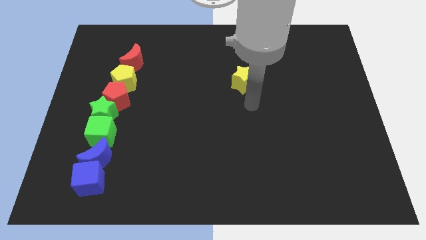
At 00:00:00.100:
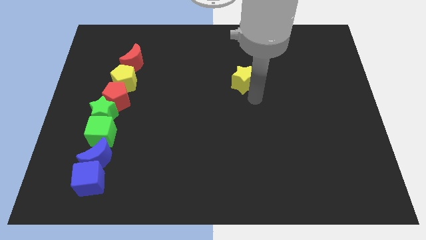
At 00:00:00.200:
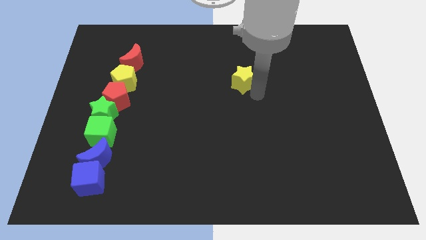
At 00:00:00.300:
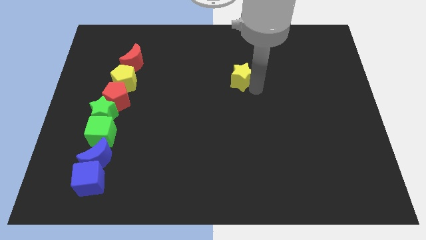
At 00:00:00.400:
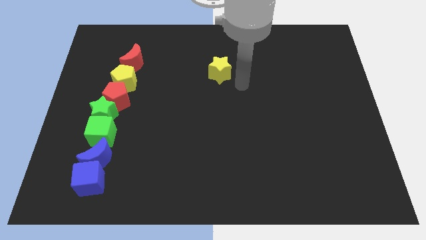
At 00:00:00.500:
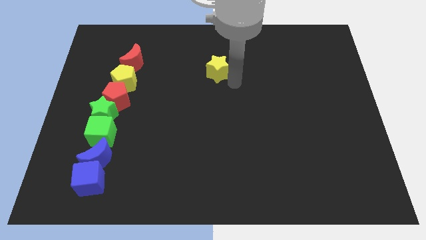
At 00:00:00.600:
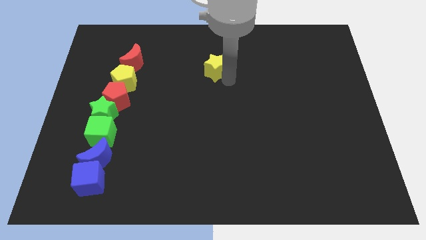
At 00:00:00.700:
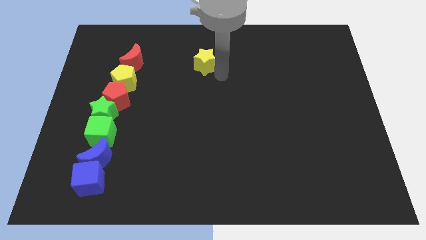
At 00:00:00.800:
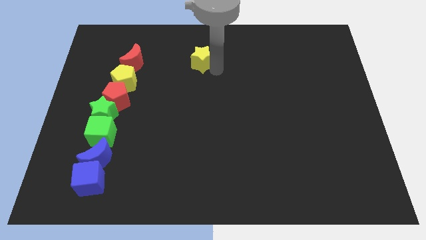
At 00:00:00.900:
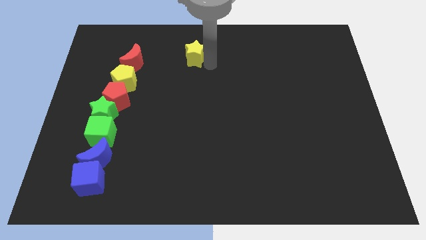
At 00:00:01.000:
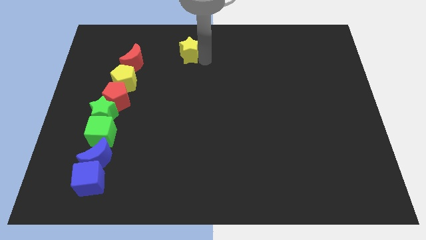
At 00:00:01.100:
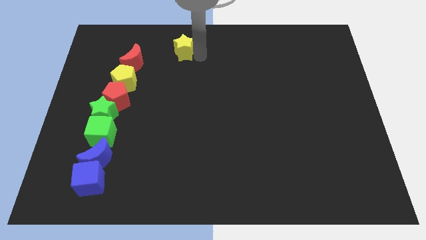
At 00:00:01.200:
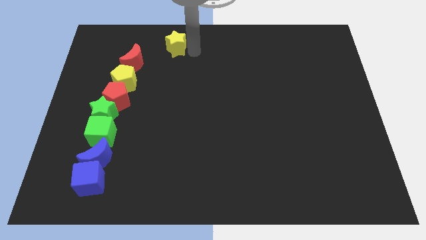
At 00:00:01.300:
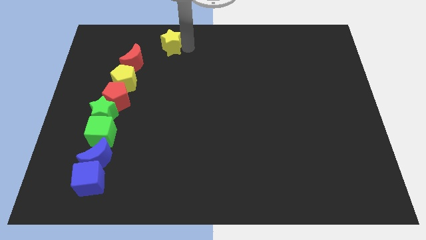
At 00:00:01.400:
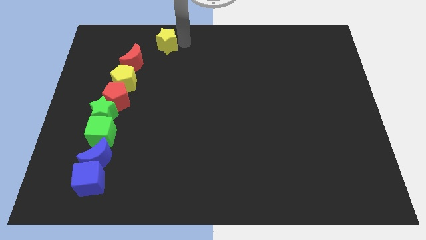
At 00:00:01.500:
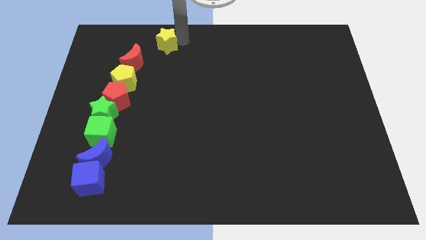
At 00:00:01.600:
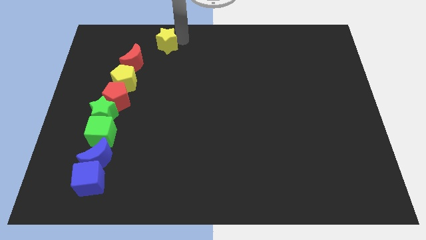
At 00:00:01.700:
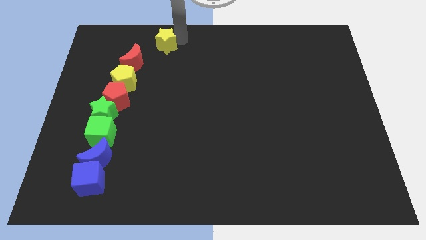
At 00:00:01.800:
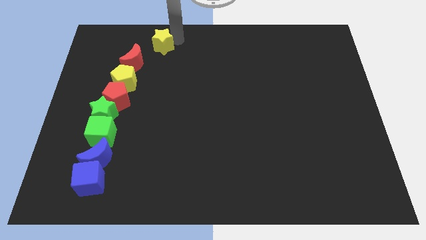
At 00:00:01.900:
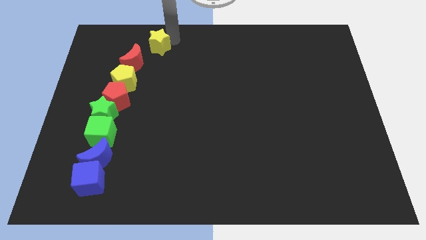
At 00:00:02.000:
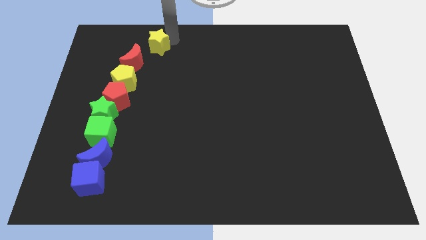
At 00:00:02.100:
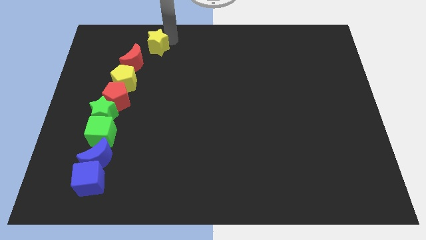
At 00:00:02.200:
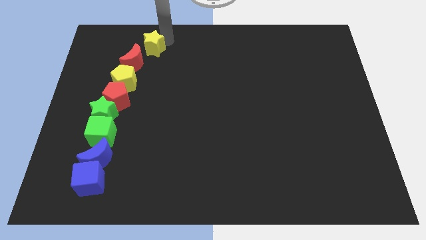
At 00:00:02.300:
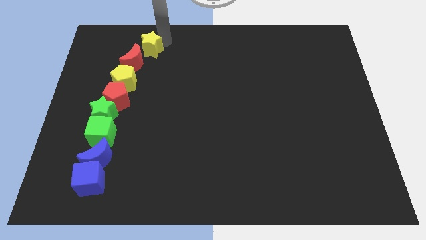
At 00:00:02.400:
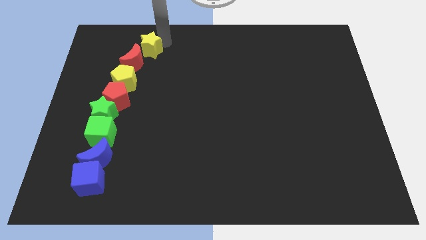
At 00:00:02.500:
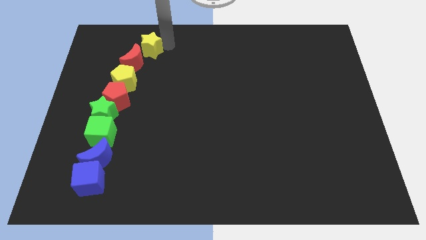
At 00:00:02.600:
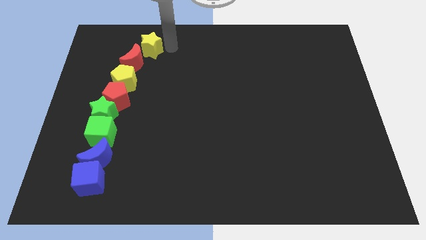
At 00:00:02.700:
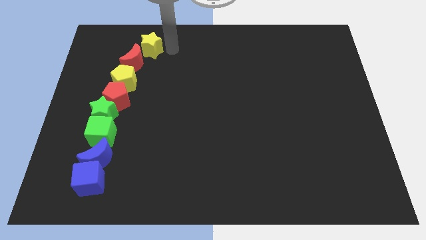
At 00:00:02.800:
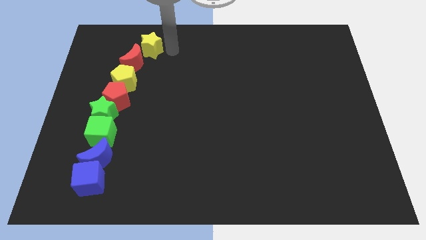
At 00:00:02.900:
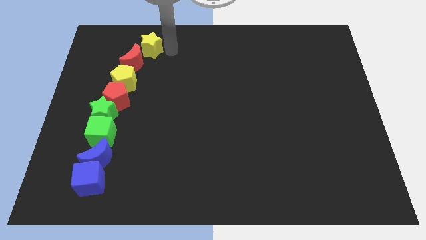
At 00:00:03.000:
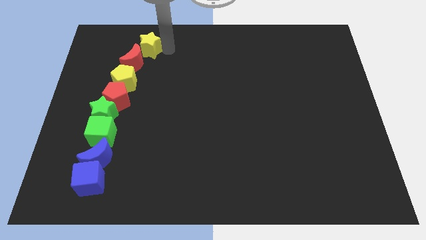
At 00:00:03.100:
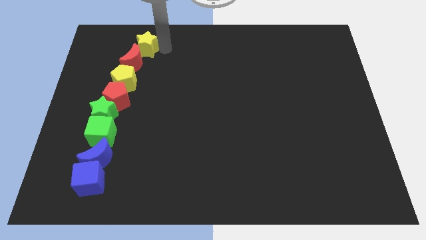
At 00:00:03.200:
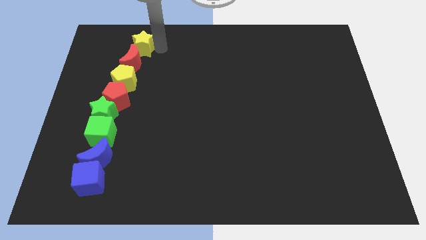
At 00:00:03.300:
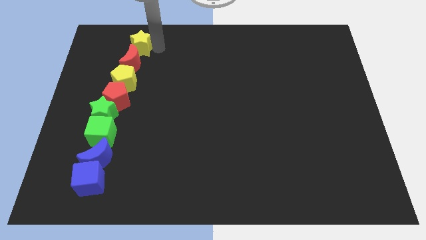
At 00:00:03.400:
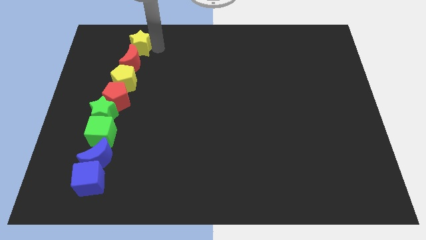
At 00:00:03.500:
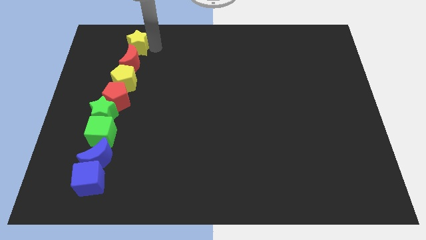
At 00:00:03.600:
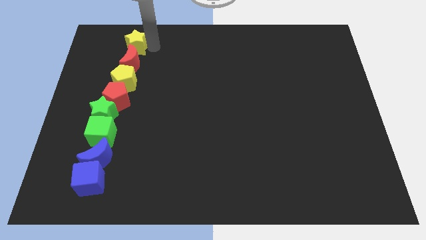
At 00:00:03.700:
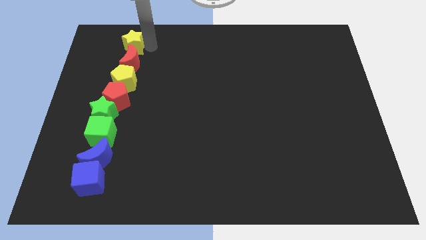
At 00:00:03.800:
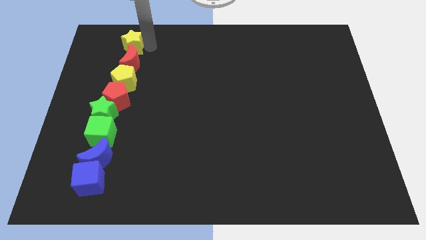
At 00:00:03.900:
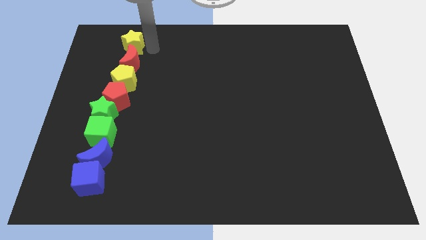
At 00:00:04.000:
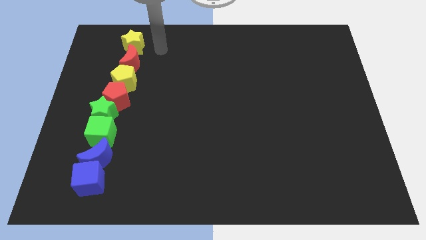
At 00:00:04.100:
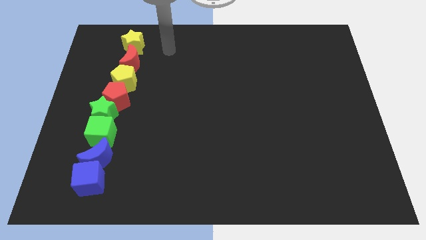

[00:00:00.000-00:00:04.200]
put the yellow star at the top of the red crescent

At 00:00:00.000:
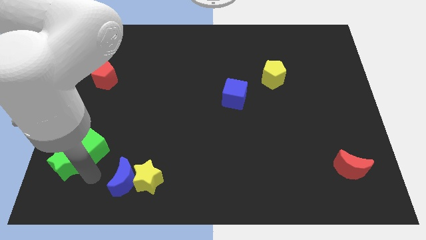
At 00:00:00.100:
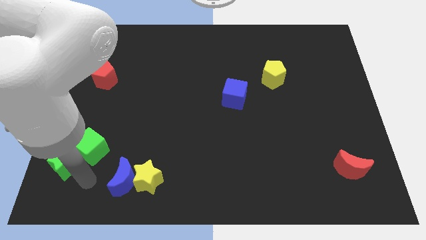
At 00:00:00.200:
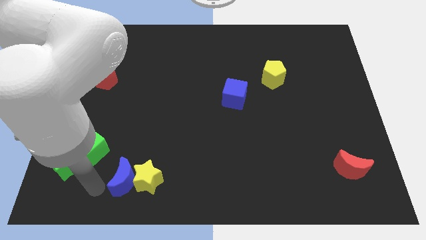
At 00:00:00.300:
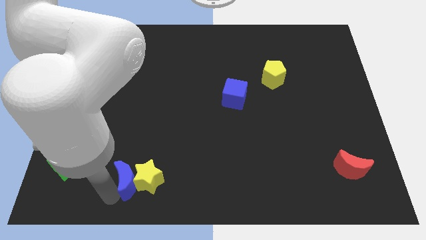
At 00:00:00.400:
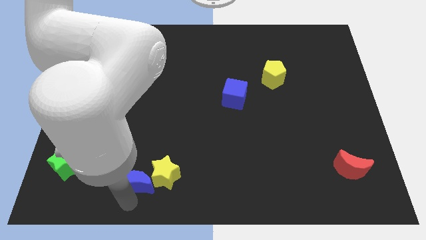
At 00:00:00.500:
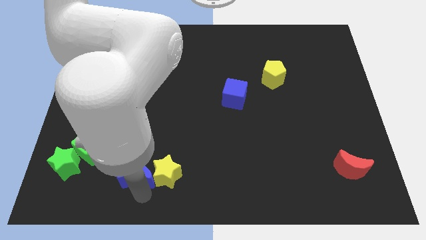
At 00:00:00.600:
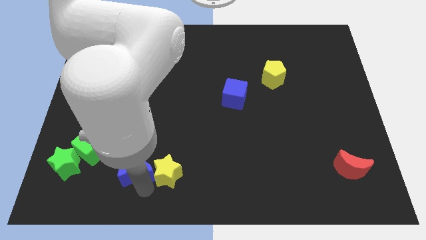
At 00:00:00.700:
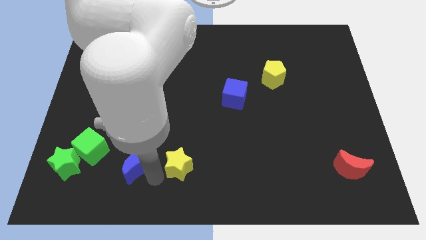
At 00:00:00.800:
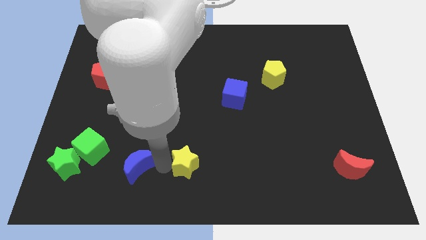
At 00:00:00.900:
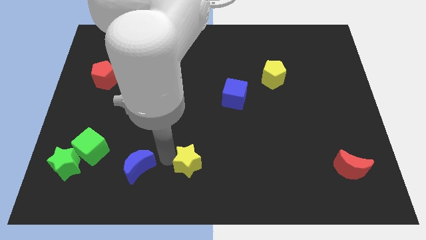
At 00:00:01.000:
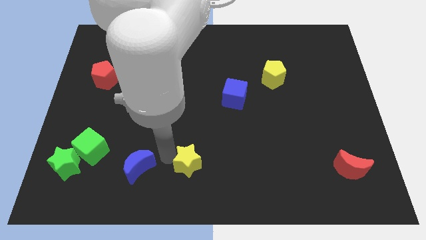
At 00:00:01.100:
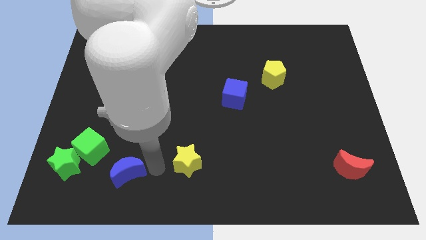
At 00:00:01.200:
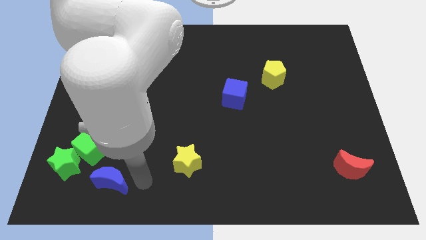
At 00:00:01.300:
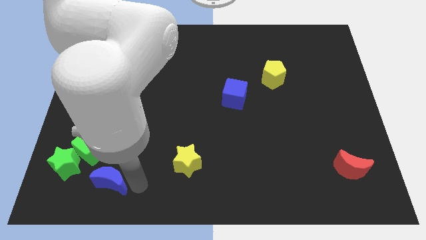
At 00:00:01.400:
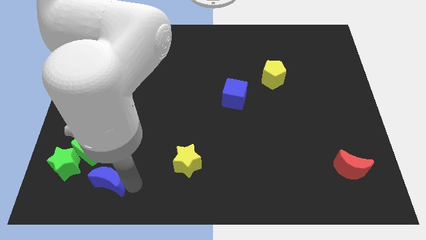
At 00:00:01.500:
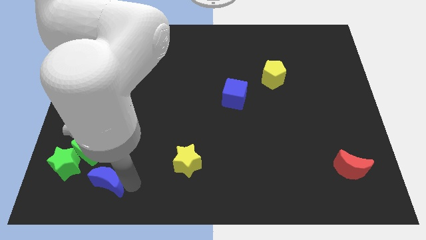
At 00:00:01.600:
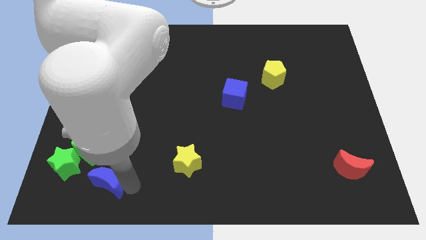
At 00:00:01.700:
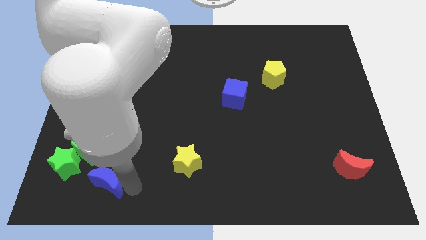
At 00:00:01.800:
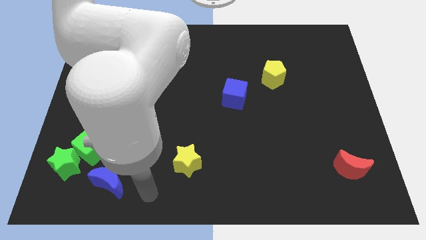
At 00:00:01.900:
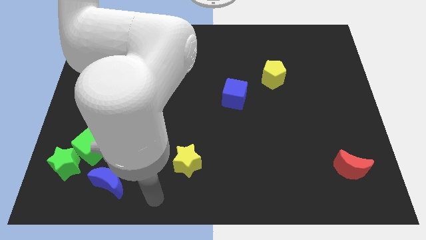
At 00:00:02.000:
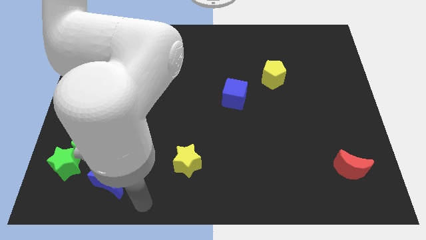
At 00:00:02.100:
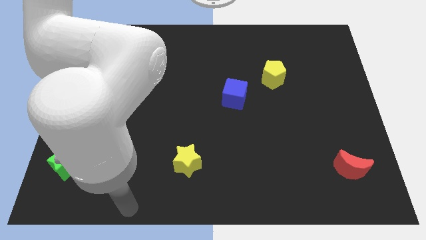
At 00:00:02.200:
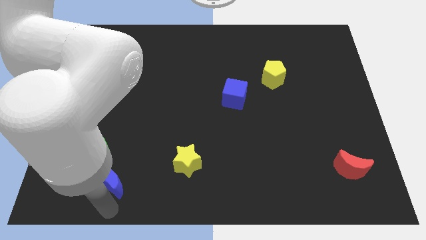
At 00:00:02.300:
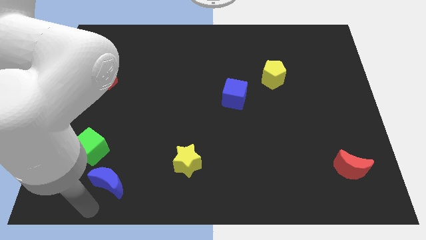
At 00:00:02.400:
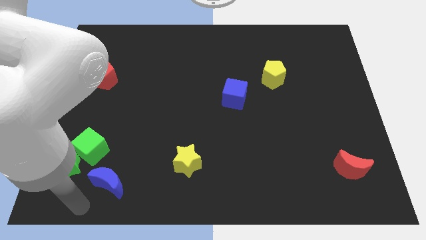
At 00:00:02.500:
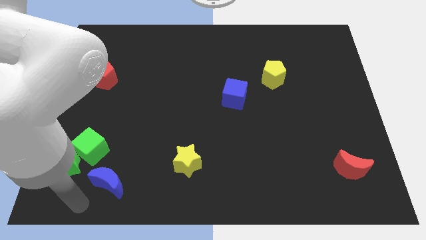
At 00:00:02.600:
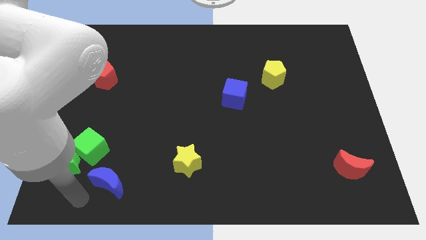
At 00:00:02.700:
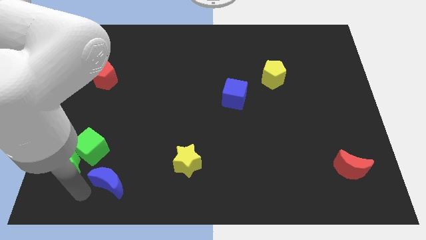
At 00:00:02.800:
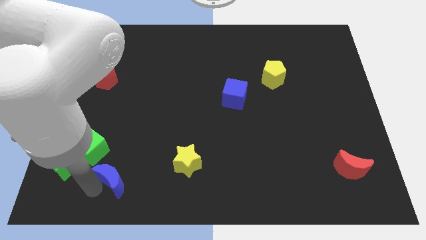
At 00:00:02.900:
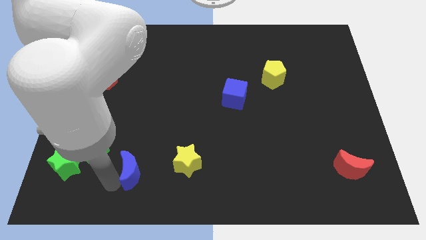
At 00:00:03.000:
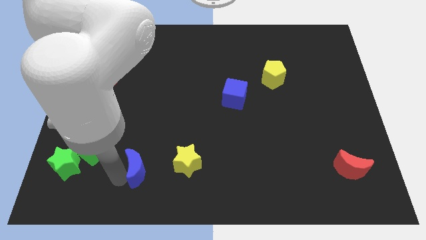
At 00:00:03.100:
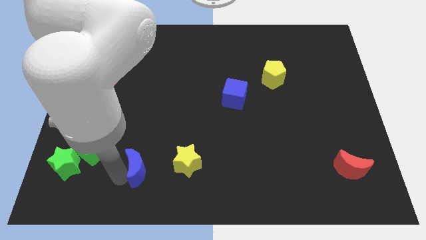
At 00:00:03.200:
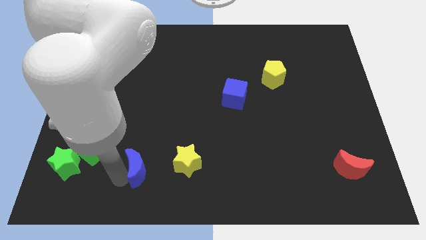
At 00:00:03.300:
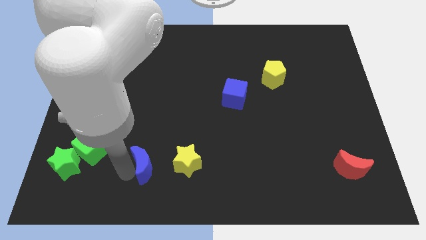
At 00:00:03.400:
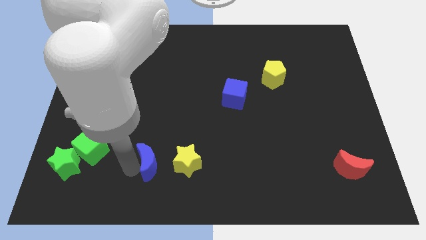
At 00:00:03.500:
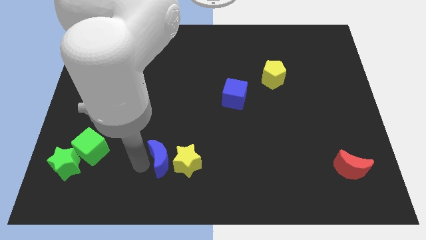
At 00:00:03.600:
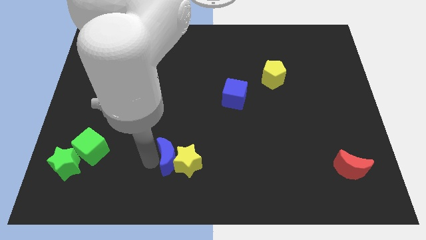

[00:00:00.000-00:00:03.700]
place the blue moon to the left of yellow star

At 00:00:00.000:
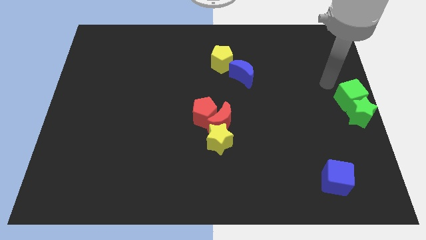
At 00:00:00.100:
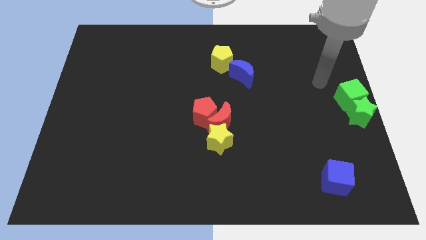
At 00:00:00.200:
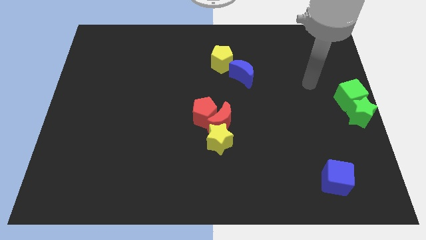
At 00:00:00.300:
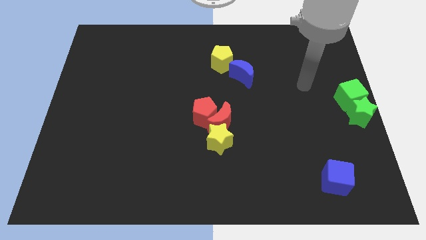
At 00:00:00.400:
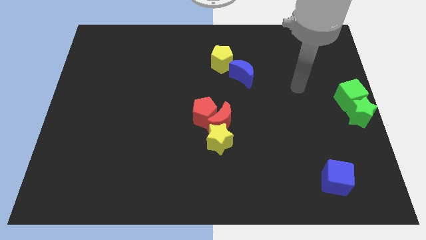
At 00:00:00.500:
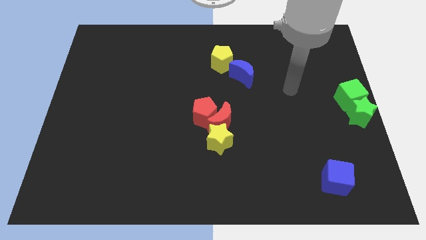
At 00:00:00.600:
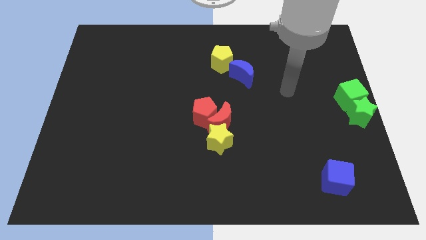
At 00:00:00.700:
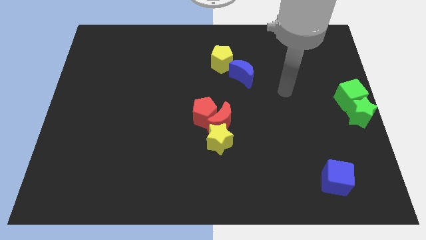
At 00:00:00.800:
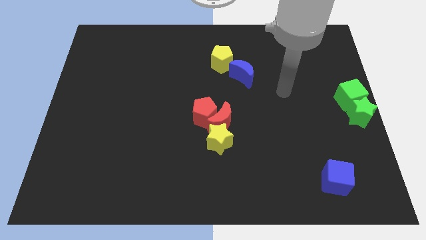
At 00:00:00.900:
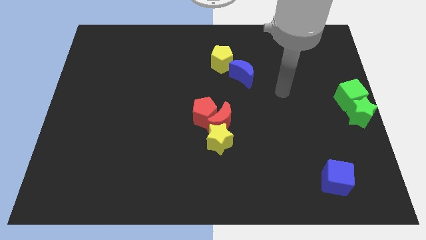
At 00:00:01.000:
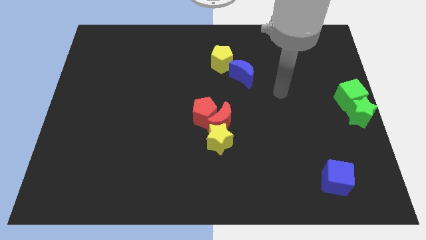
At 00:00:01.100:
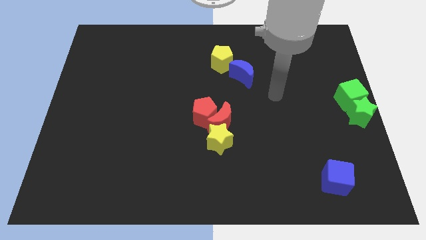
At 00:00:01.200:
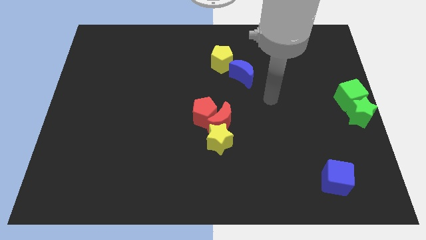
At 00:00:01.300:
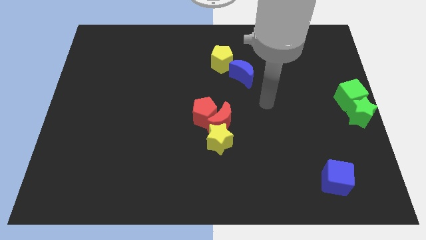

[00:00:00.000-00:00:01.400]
move your arm towards the center
